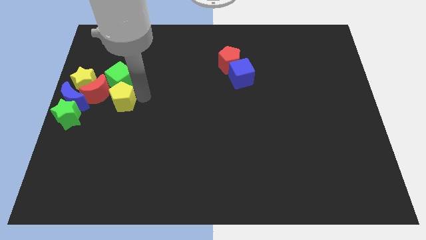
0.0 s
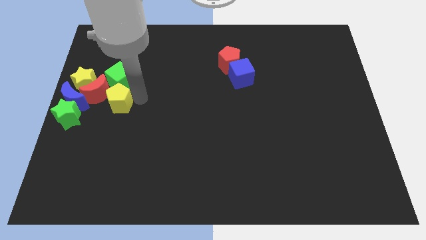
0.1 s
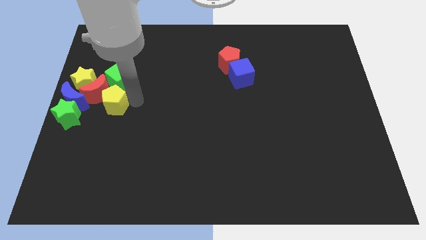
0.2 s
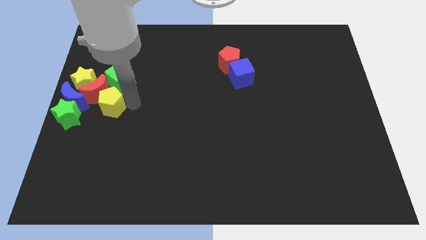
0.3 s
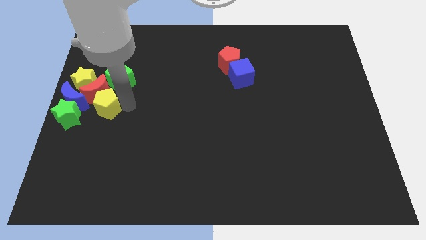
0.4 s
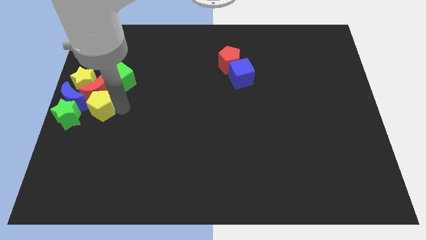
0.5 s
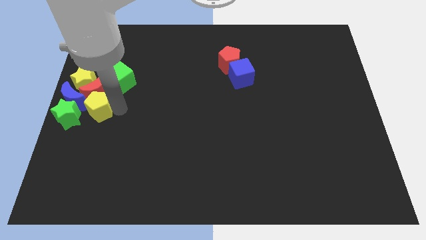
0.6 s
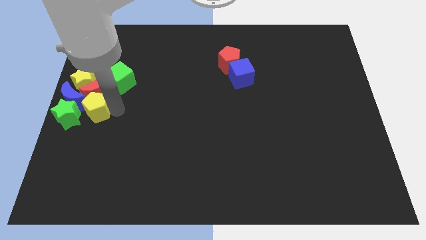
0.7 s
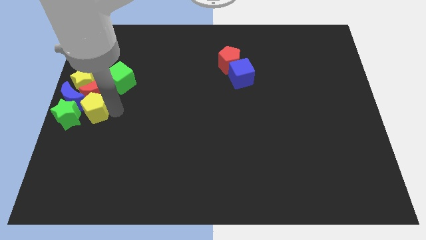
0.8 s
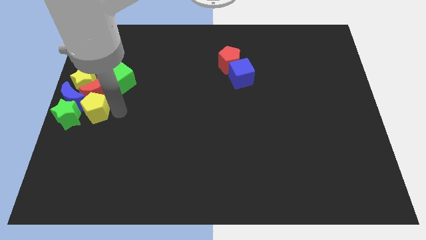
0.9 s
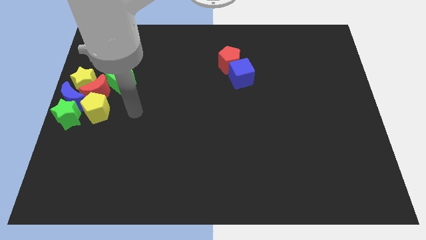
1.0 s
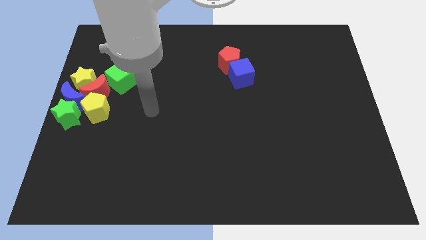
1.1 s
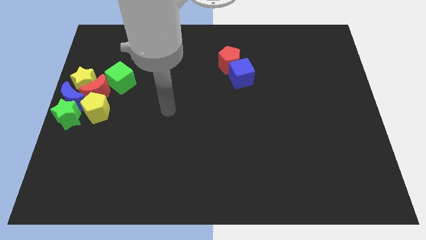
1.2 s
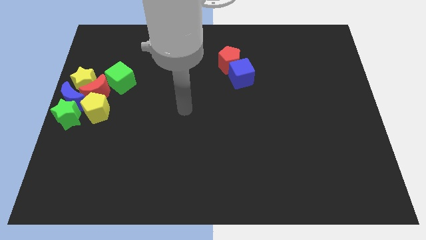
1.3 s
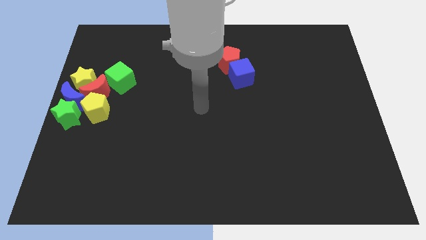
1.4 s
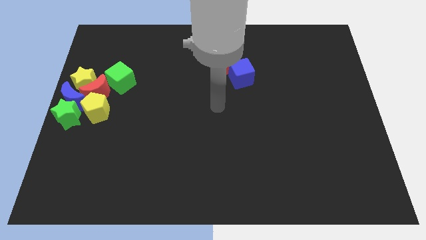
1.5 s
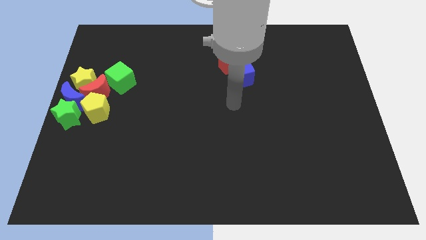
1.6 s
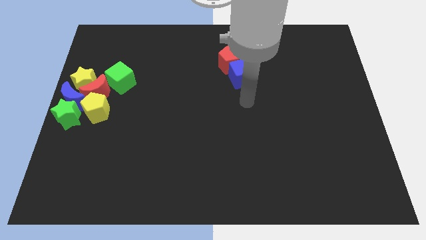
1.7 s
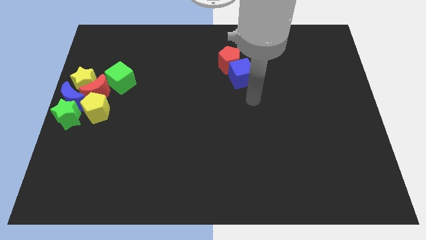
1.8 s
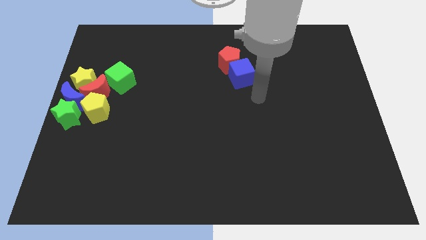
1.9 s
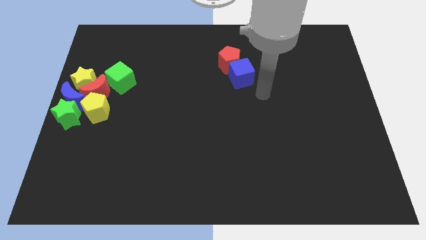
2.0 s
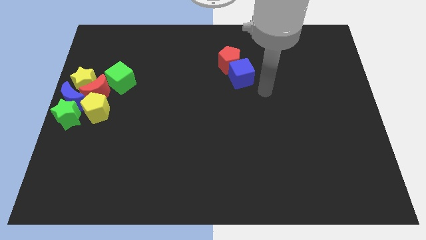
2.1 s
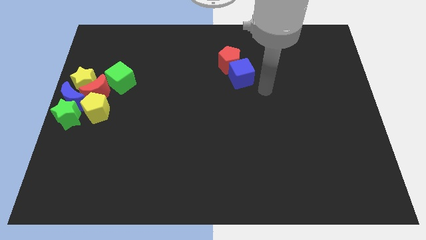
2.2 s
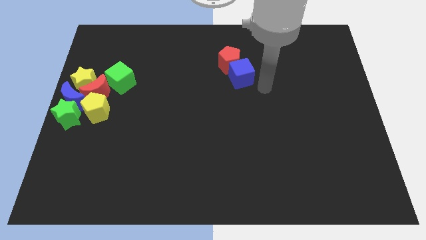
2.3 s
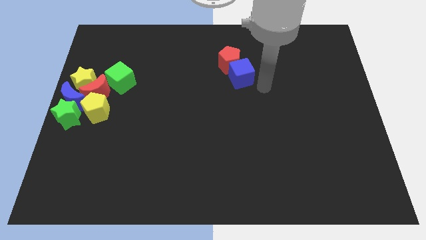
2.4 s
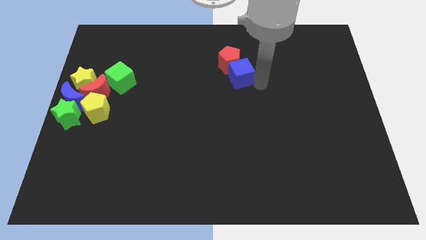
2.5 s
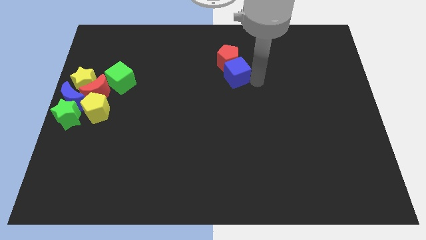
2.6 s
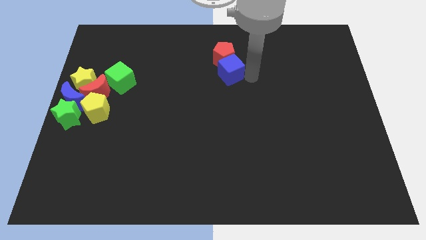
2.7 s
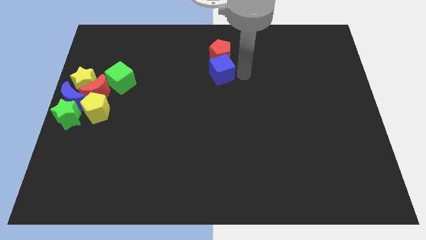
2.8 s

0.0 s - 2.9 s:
push the red pentagon to the top of the board with the blue cube

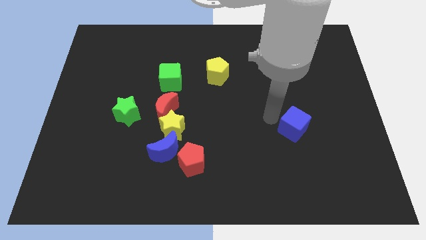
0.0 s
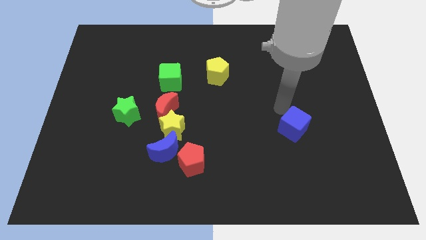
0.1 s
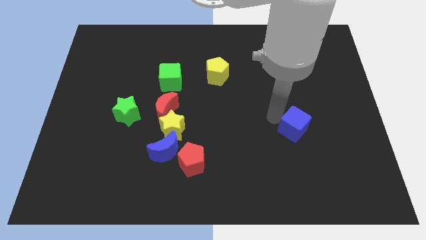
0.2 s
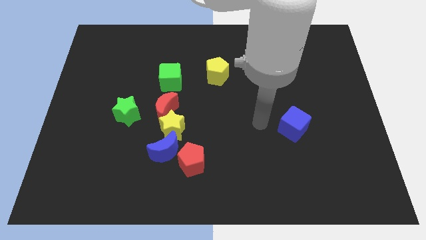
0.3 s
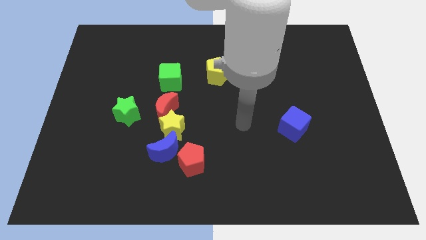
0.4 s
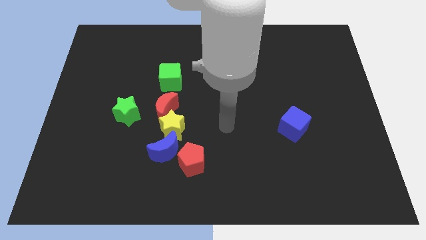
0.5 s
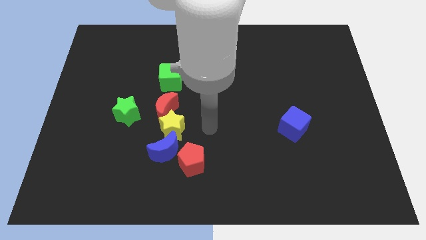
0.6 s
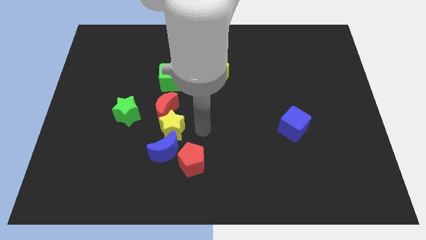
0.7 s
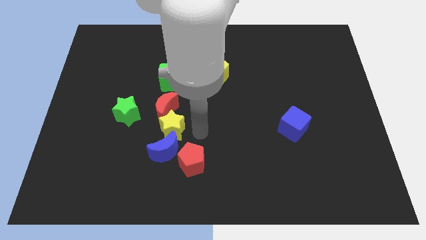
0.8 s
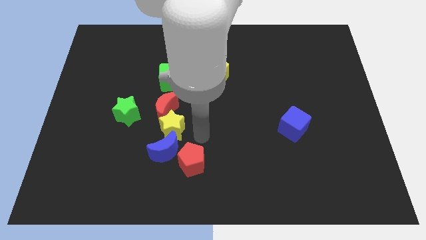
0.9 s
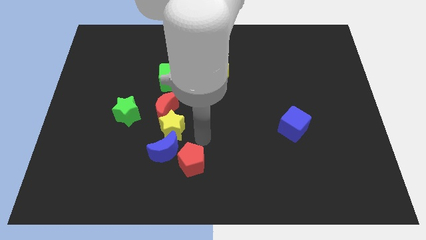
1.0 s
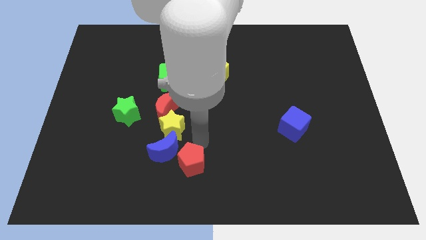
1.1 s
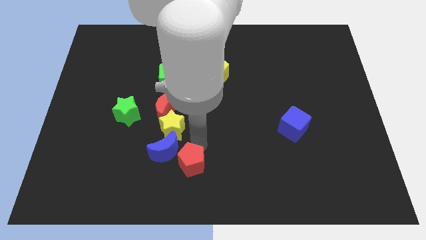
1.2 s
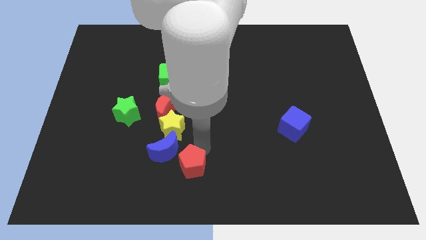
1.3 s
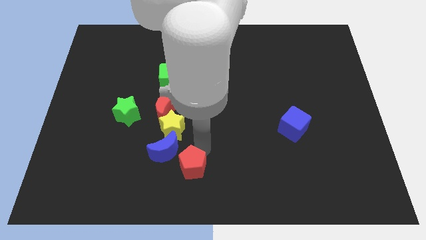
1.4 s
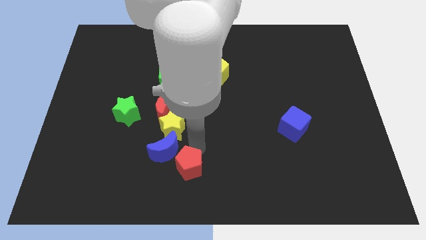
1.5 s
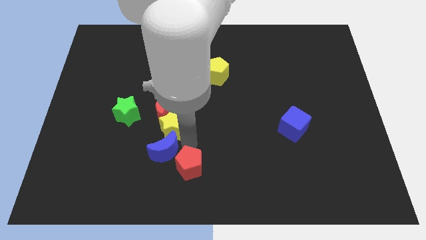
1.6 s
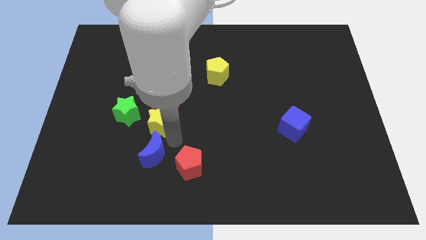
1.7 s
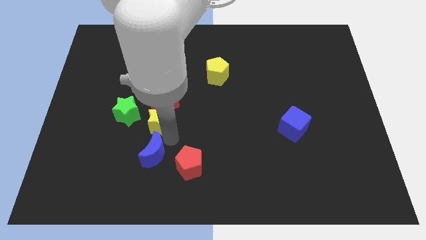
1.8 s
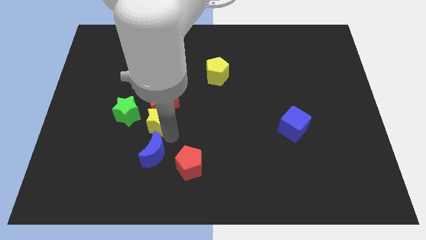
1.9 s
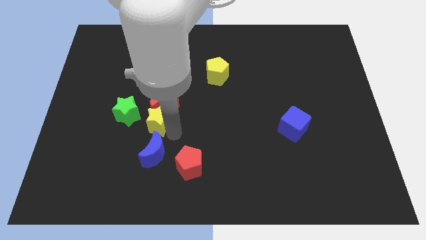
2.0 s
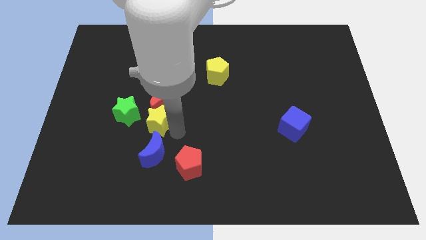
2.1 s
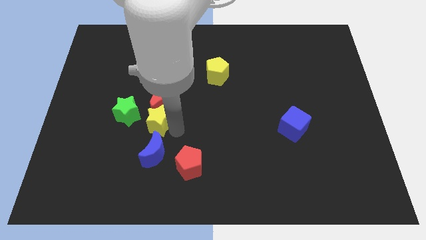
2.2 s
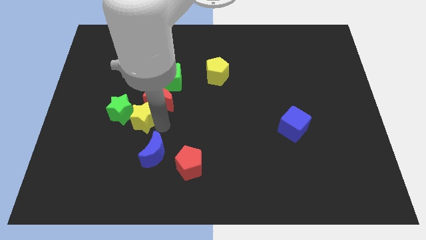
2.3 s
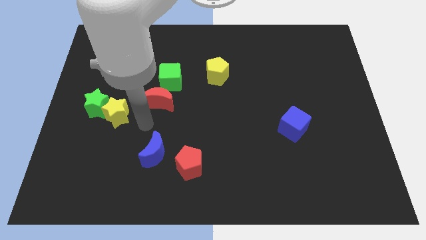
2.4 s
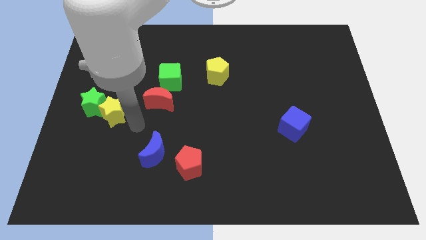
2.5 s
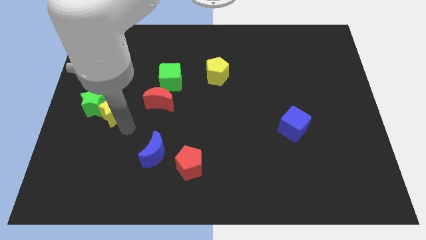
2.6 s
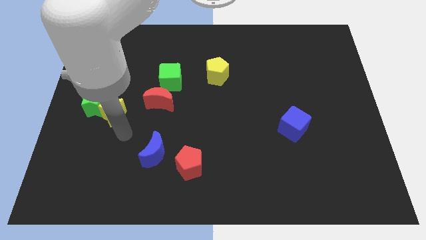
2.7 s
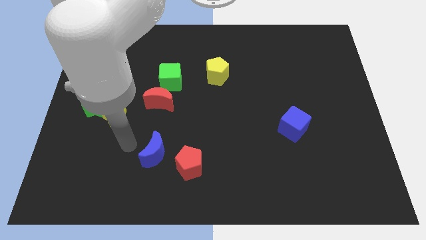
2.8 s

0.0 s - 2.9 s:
push the yellow star into the green star

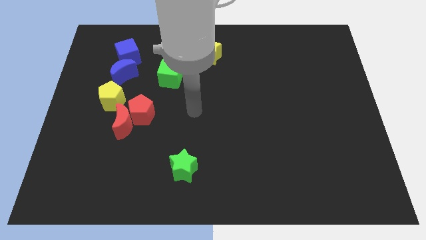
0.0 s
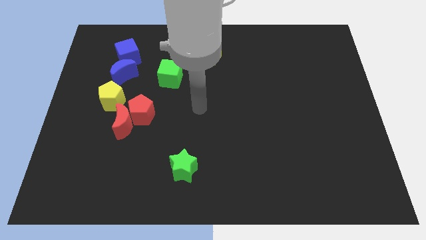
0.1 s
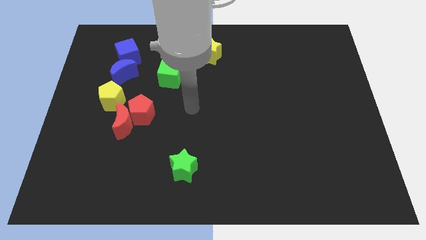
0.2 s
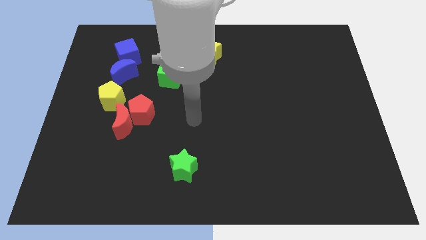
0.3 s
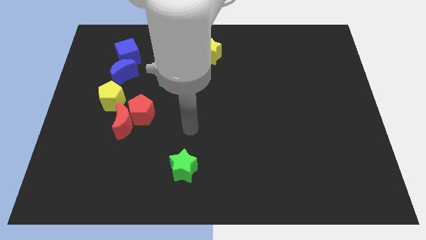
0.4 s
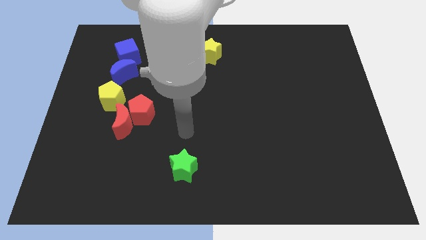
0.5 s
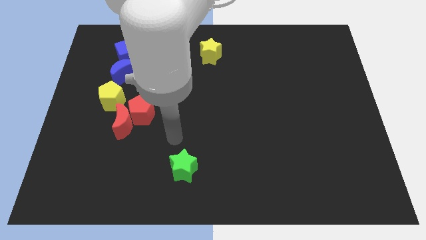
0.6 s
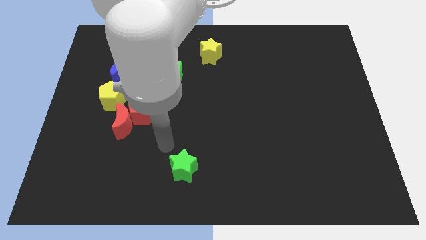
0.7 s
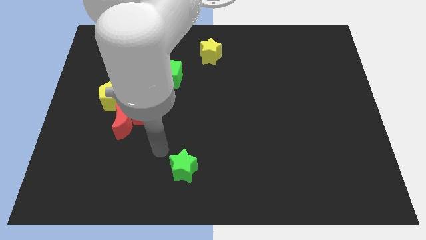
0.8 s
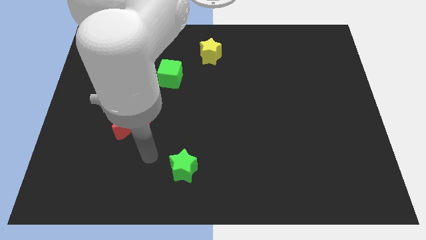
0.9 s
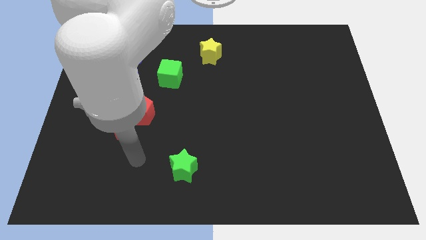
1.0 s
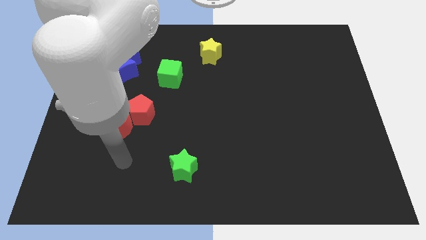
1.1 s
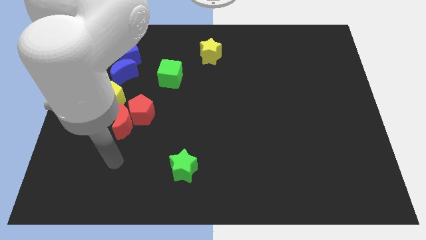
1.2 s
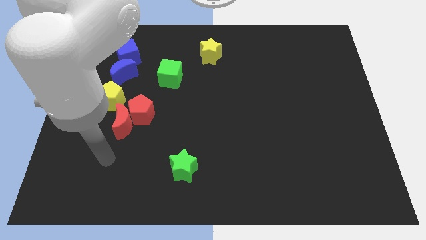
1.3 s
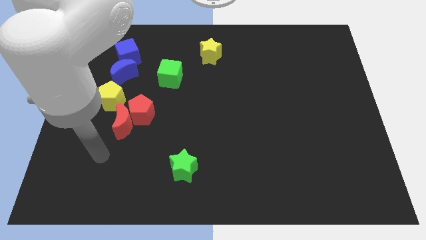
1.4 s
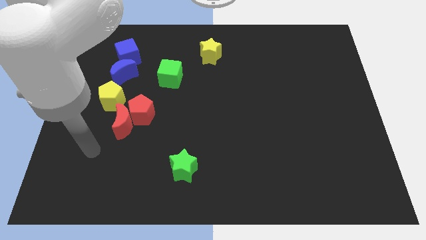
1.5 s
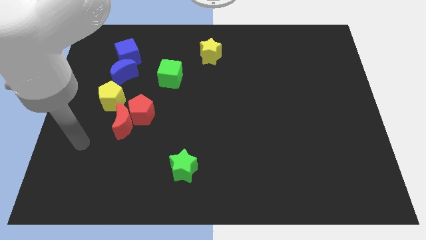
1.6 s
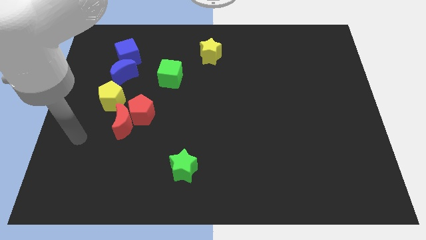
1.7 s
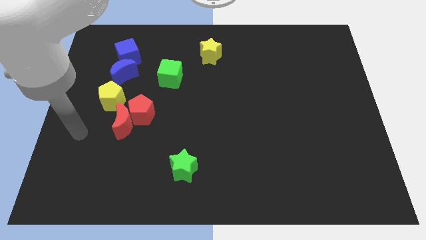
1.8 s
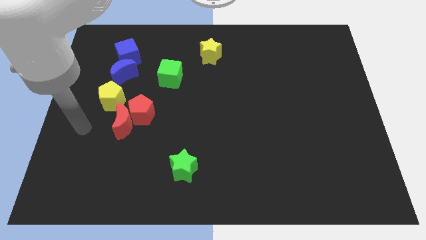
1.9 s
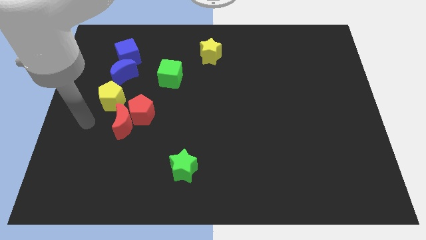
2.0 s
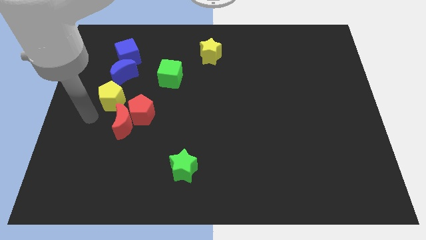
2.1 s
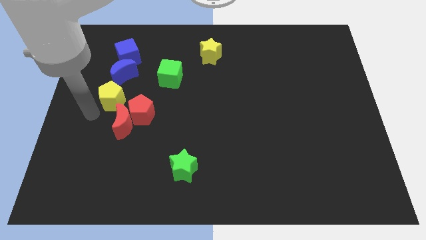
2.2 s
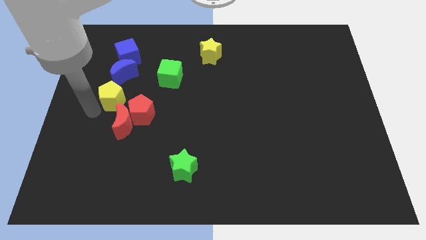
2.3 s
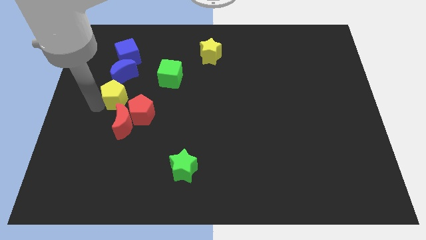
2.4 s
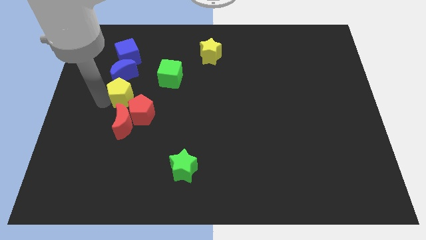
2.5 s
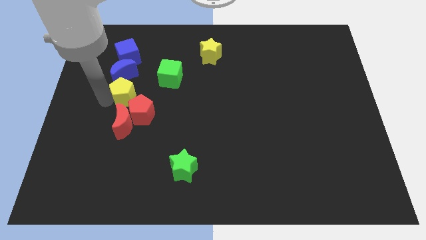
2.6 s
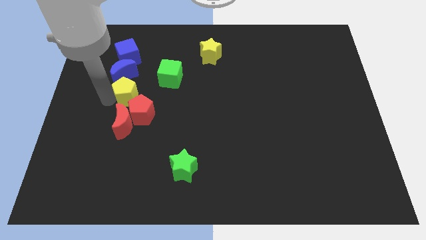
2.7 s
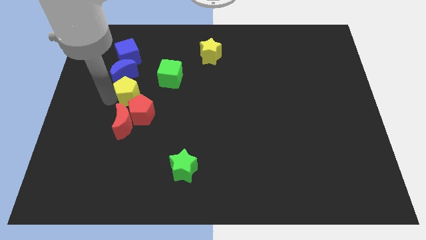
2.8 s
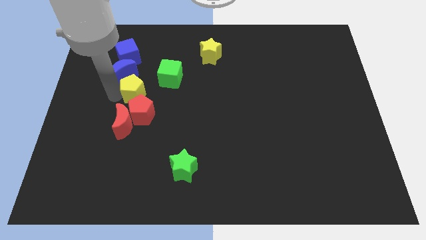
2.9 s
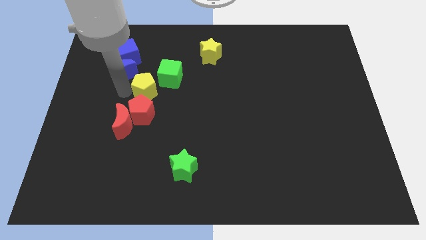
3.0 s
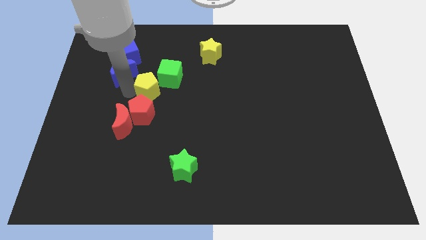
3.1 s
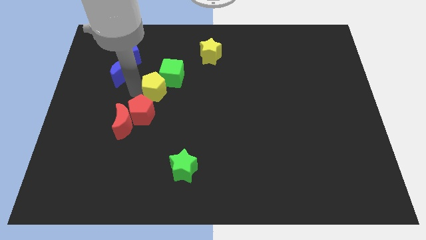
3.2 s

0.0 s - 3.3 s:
move the yellow pentagon below the bottom left of green cube
